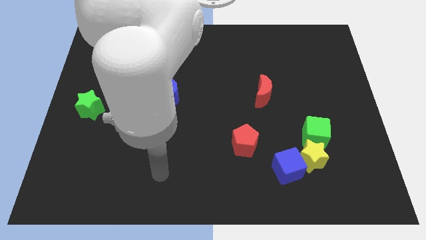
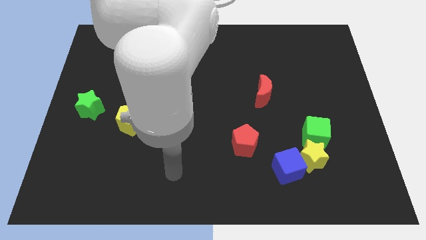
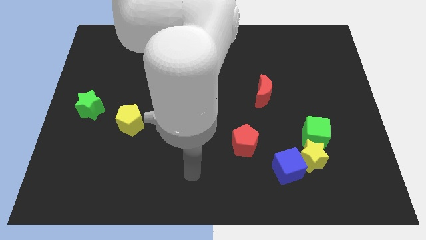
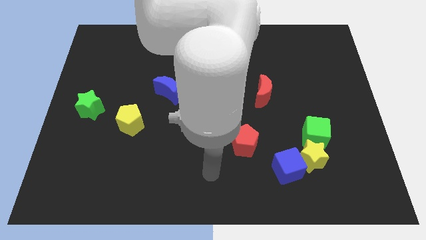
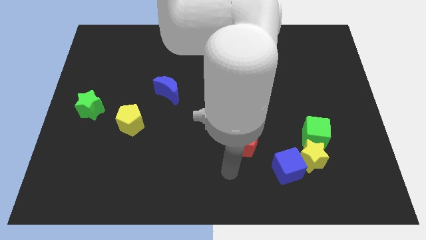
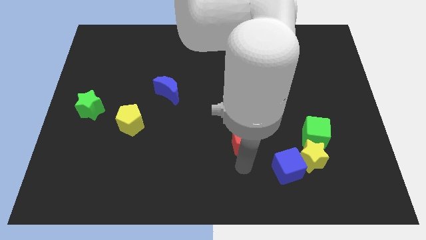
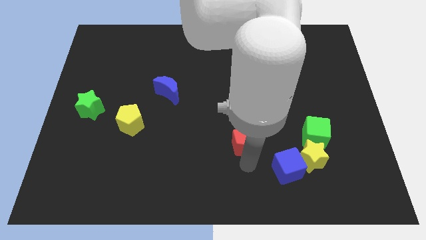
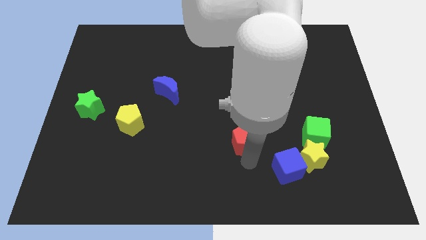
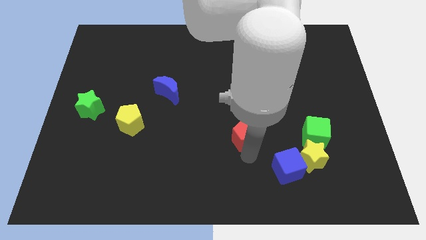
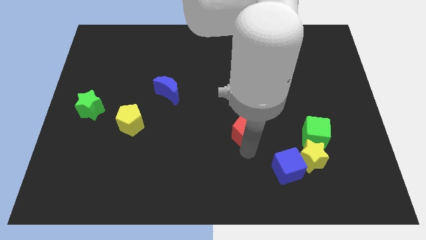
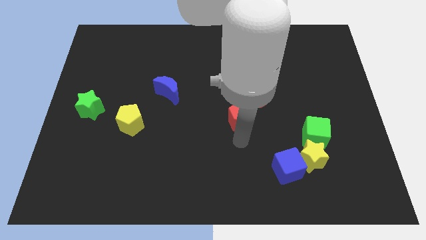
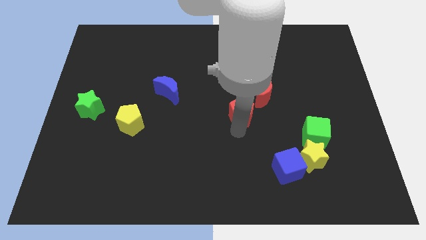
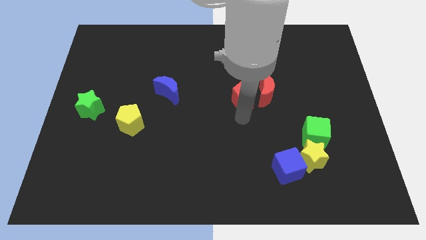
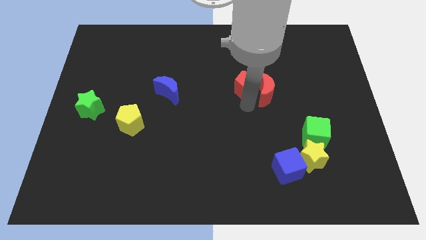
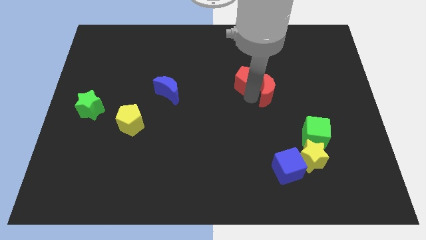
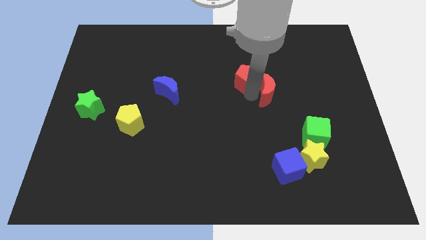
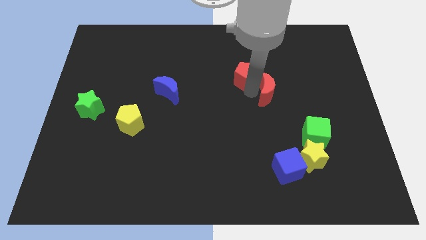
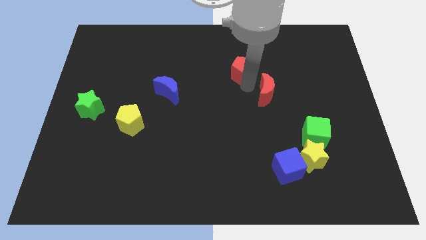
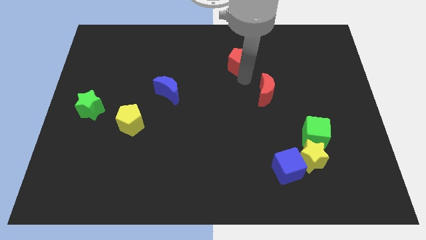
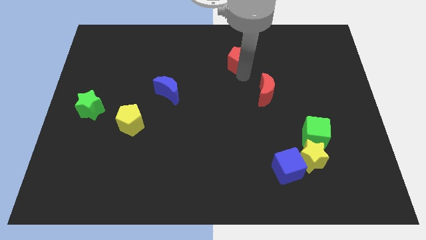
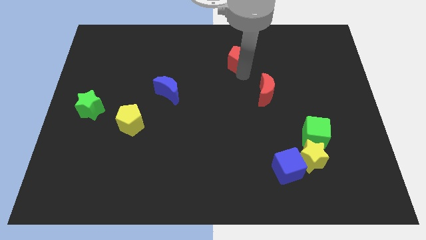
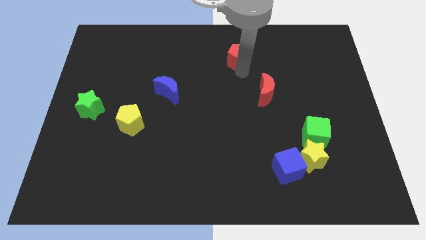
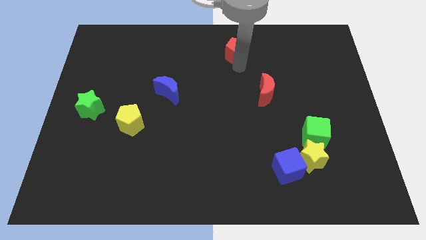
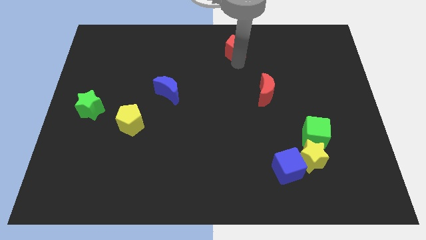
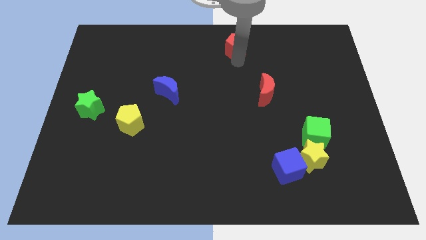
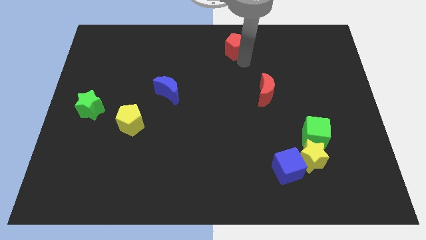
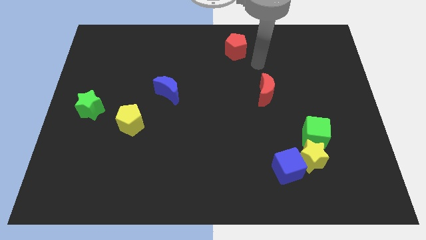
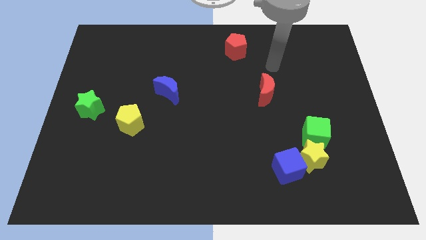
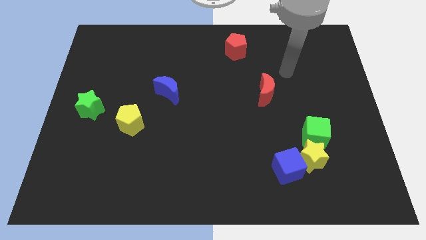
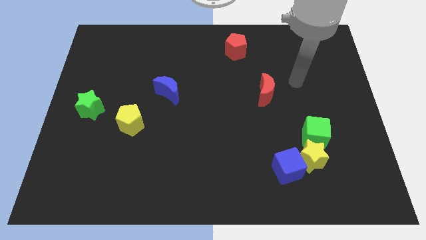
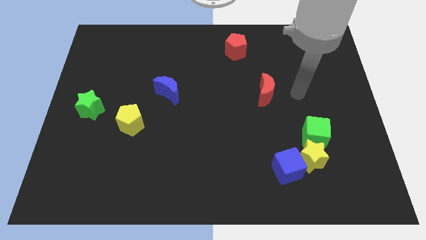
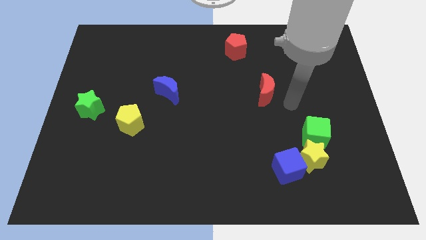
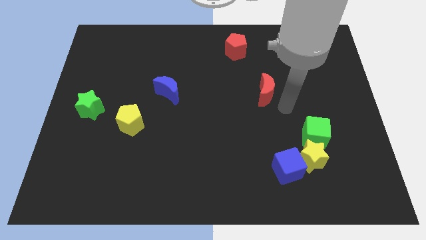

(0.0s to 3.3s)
push the red pentagon to the top left of the red crescent

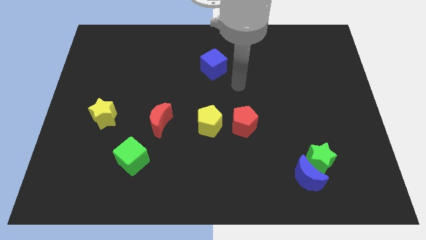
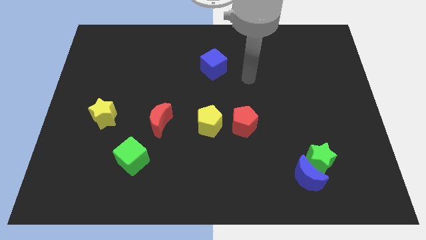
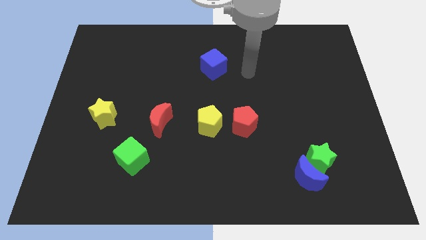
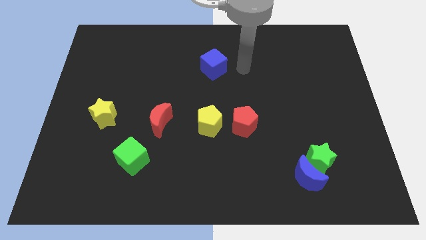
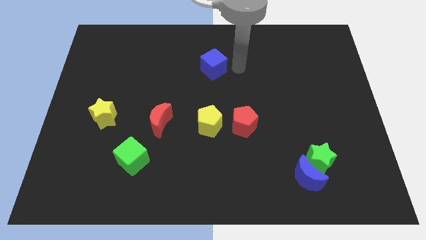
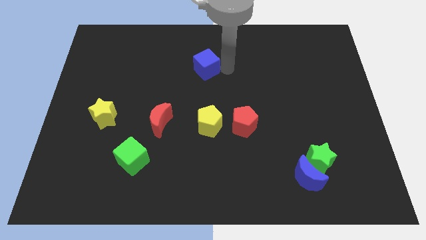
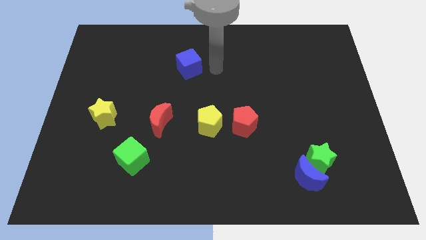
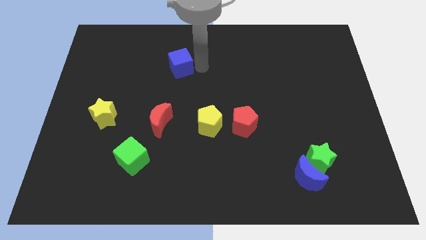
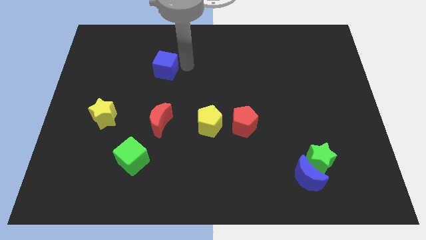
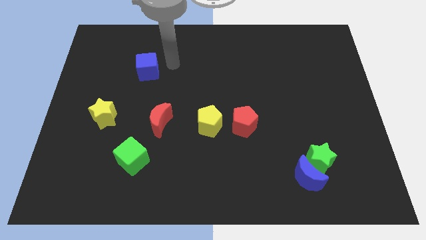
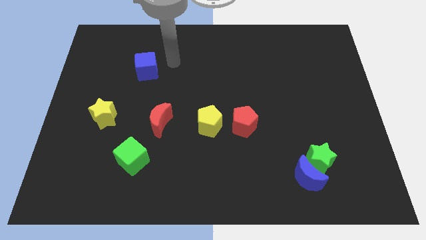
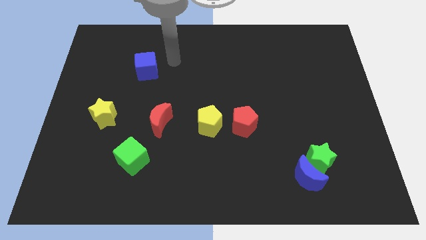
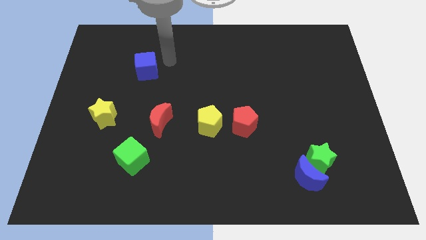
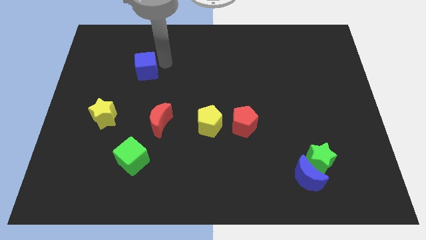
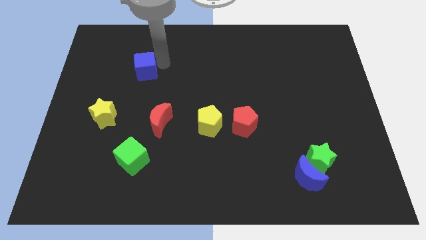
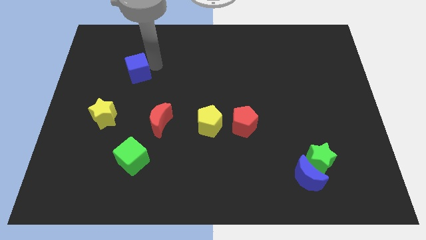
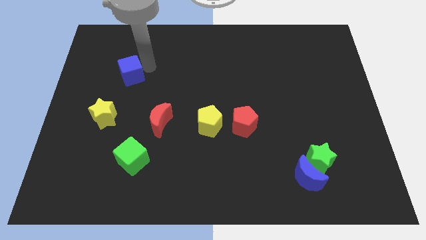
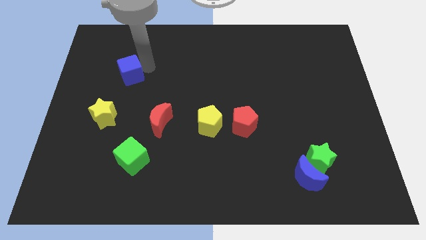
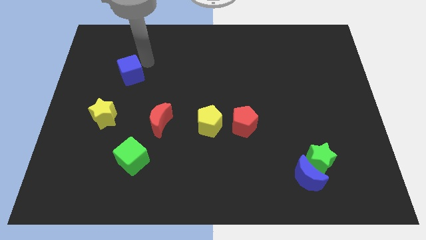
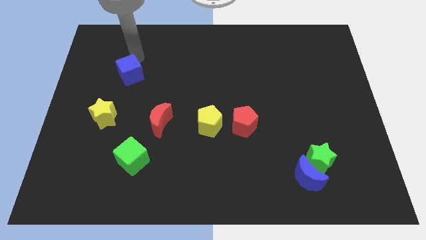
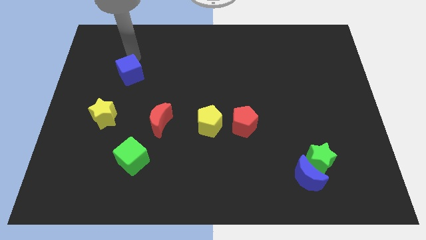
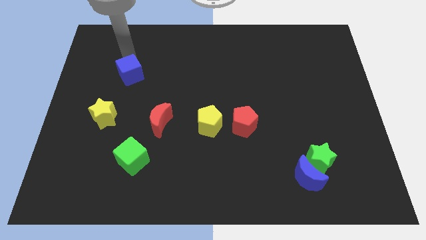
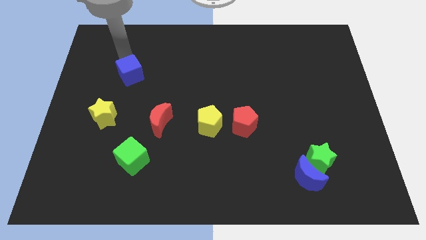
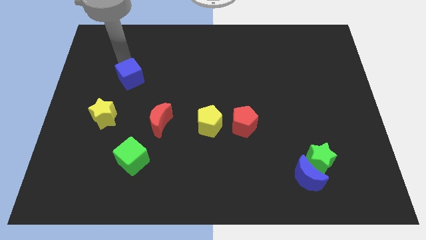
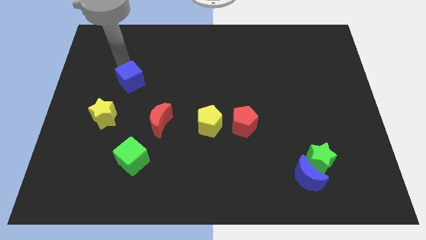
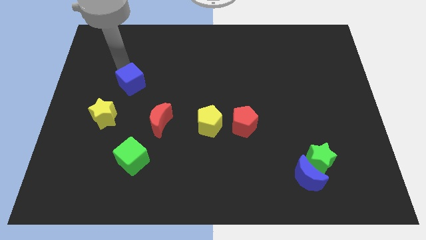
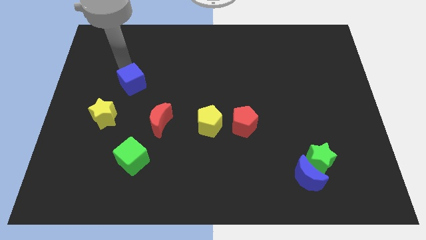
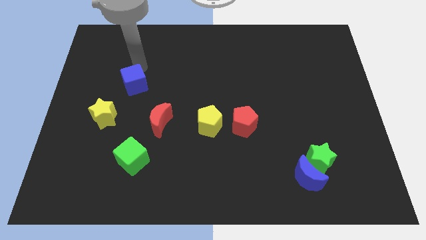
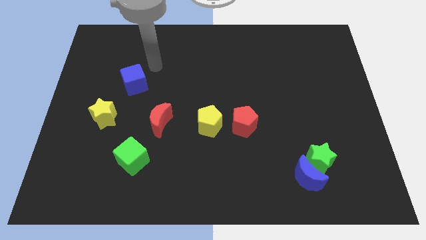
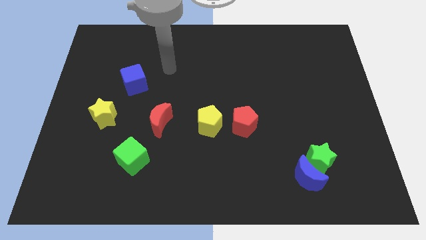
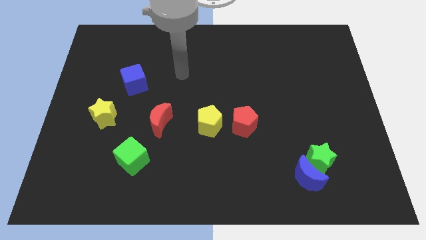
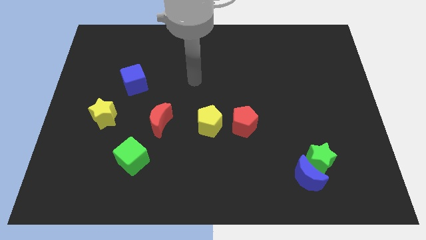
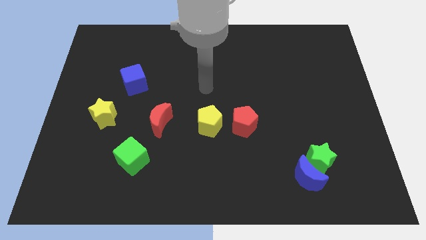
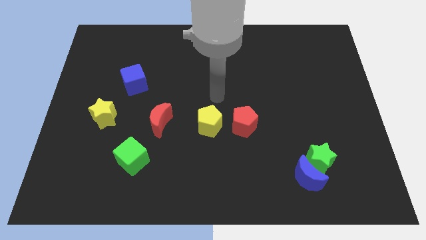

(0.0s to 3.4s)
move the blue cube to form a triangle with yellow star and red moon

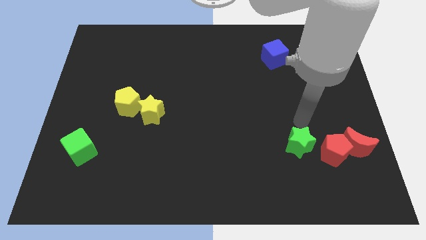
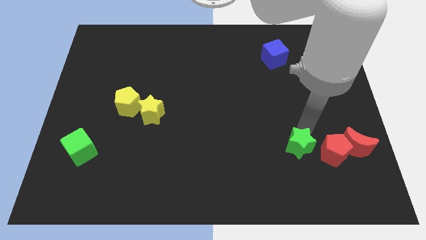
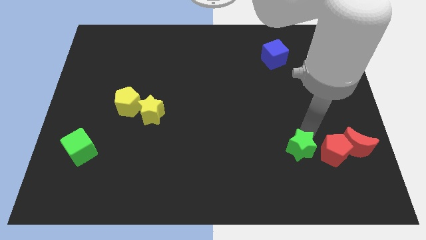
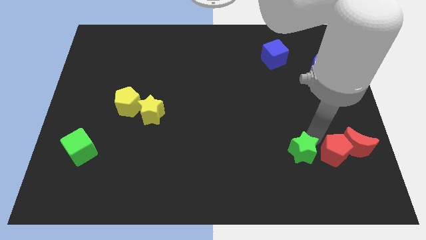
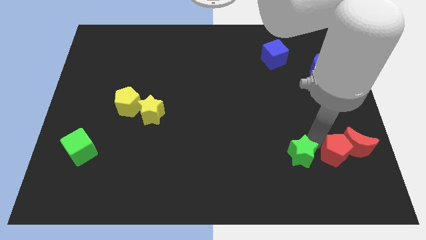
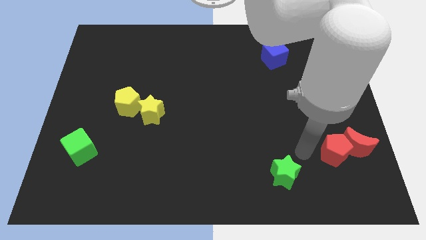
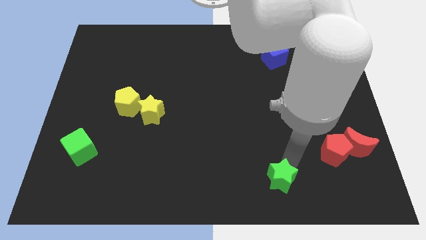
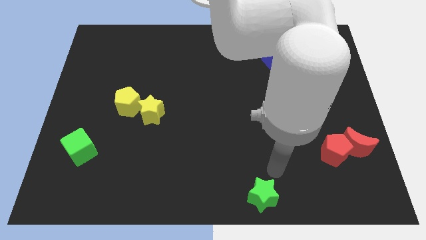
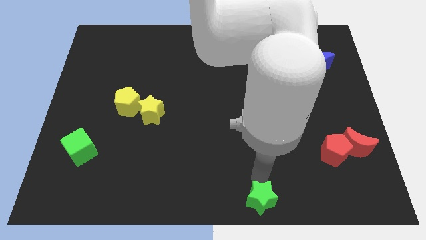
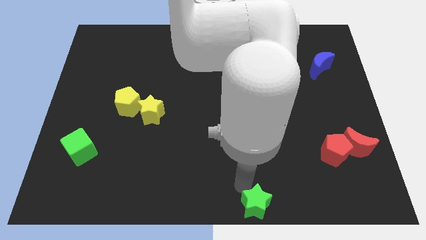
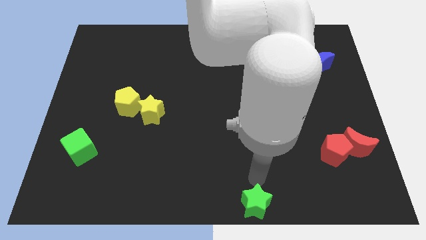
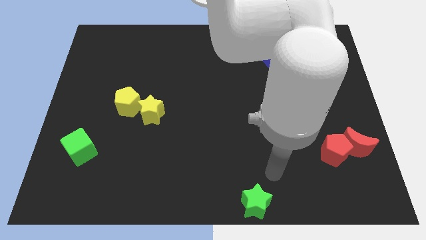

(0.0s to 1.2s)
place the green star at bottom side of the board

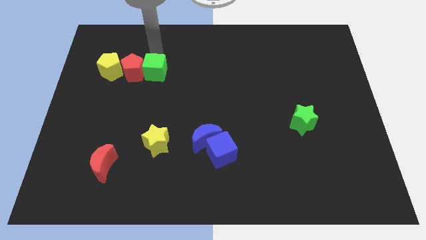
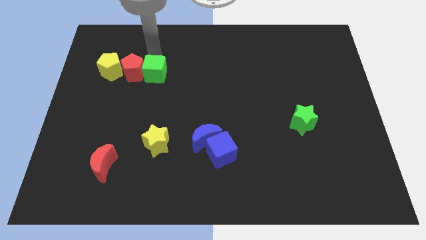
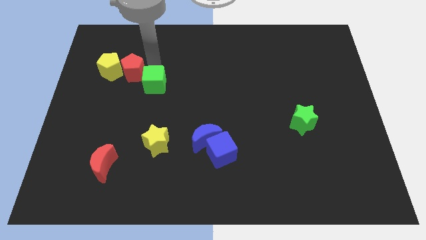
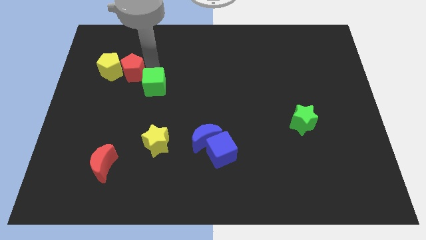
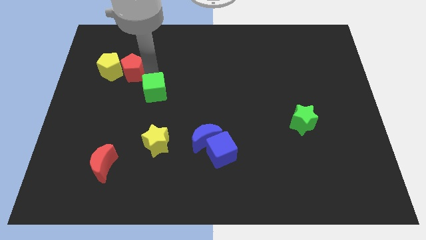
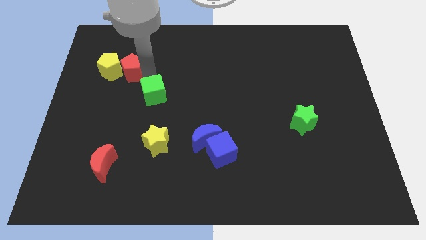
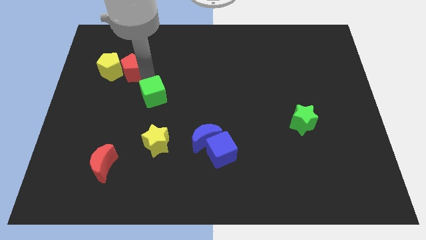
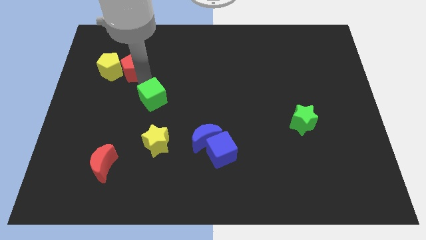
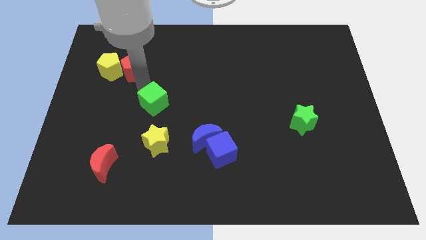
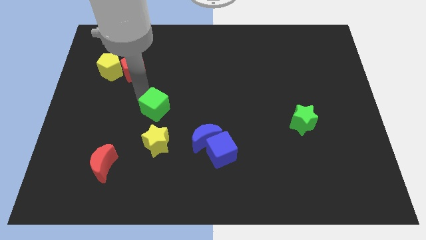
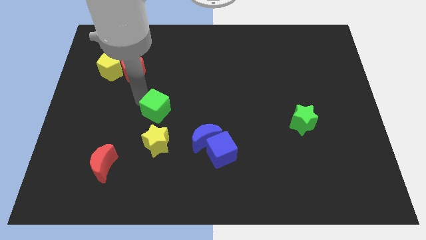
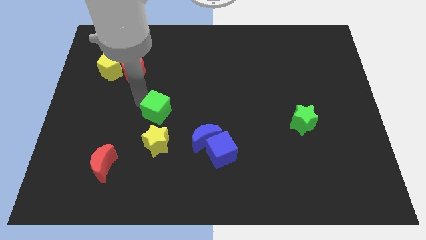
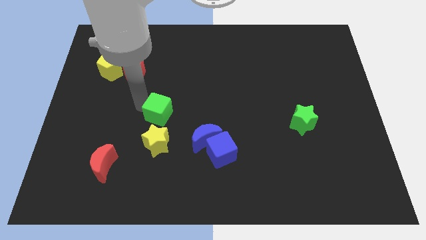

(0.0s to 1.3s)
move the green cube to the top of the yellow star
